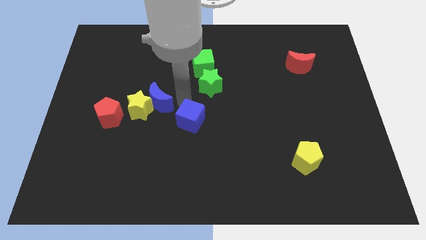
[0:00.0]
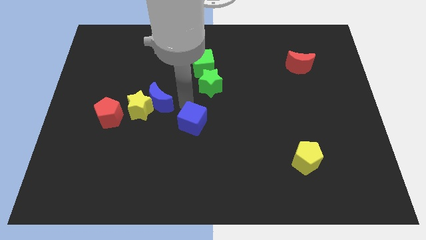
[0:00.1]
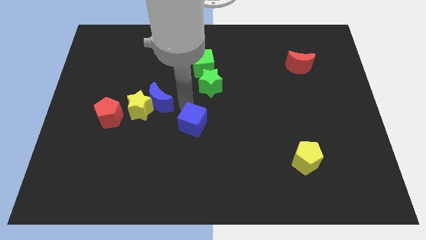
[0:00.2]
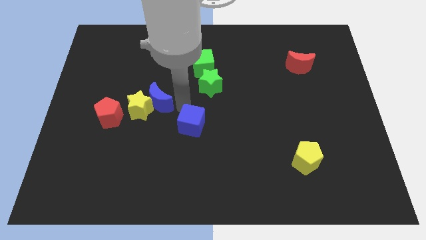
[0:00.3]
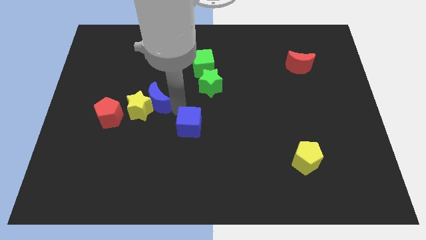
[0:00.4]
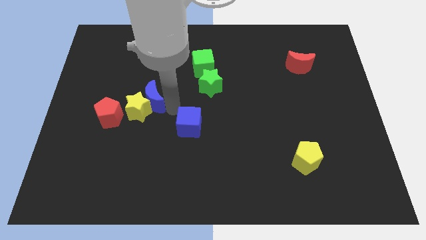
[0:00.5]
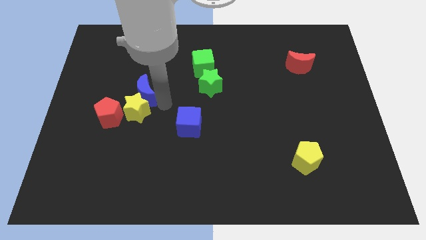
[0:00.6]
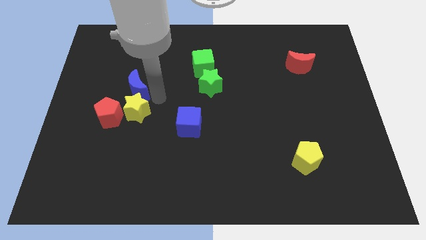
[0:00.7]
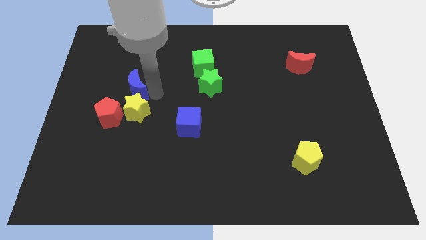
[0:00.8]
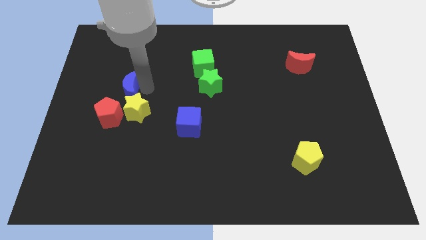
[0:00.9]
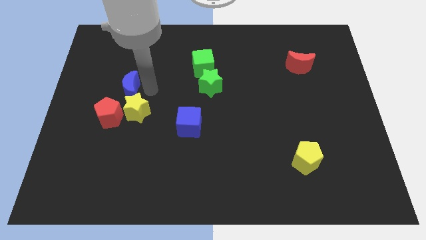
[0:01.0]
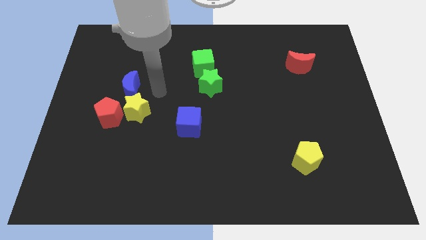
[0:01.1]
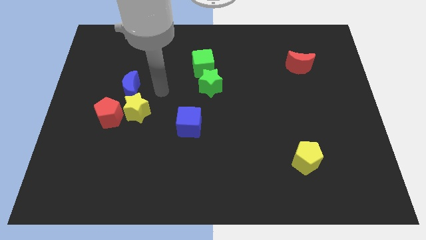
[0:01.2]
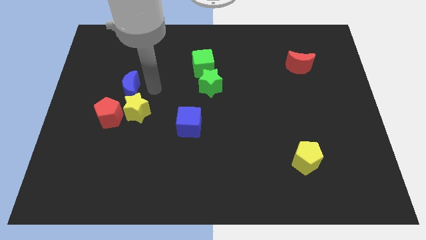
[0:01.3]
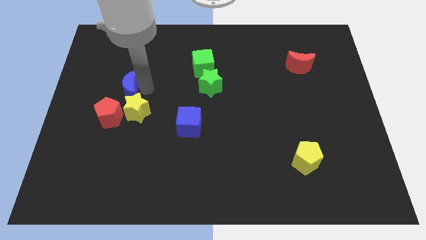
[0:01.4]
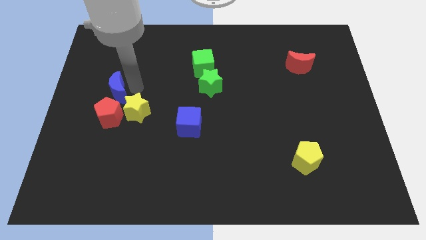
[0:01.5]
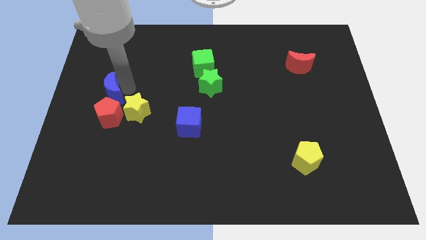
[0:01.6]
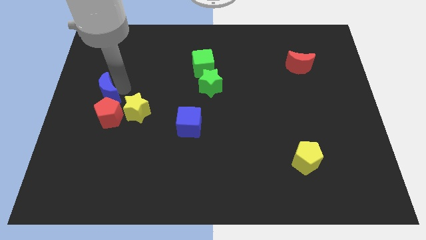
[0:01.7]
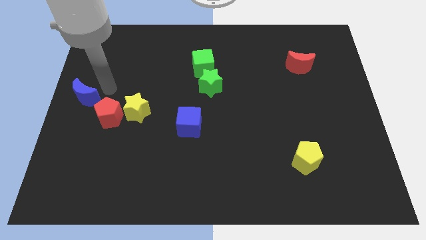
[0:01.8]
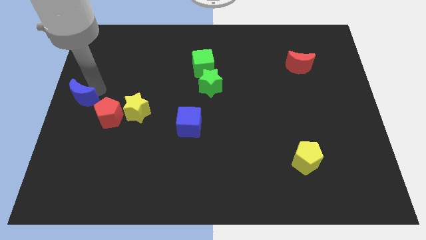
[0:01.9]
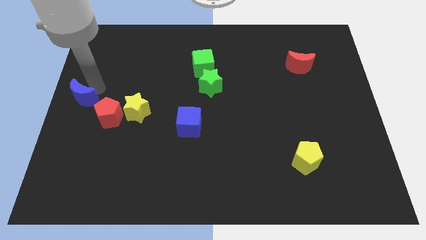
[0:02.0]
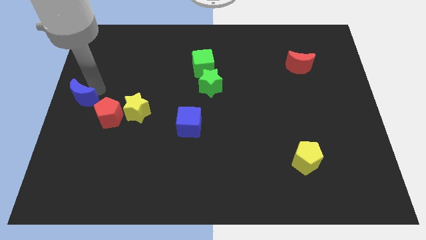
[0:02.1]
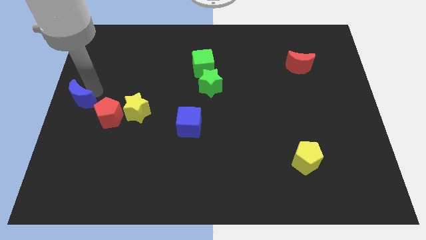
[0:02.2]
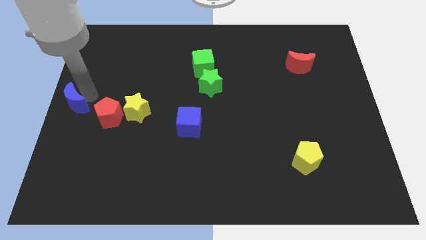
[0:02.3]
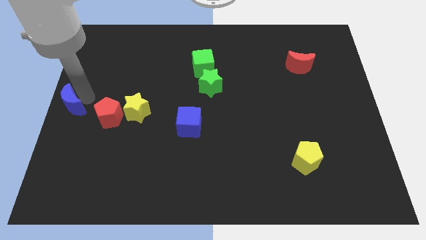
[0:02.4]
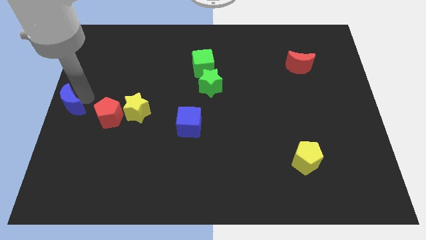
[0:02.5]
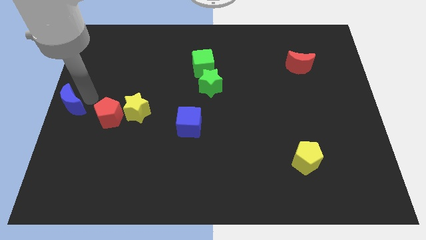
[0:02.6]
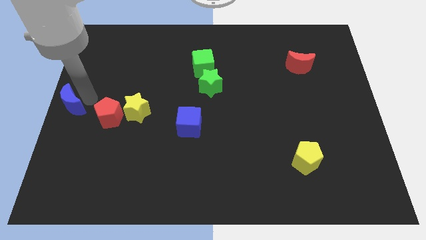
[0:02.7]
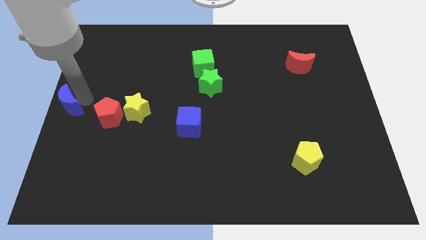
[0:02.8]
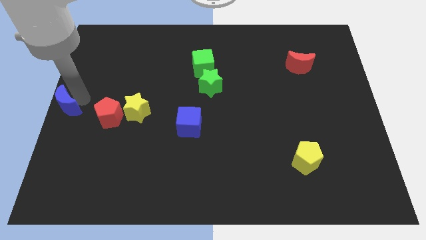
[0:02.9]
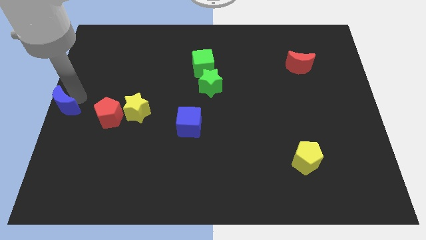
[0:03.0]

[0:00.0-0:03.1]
place the blue moon to the top left of the red pentagon

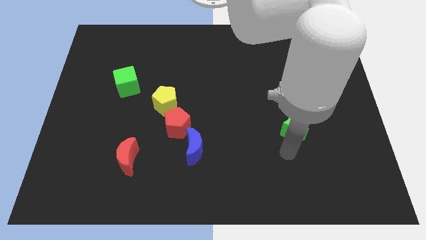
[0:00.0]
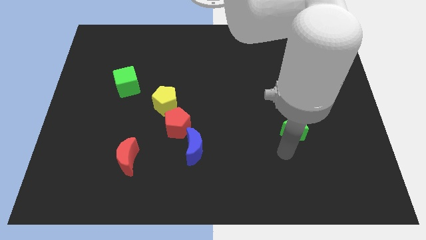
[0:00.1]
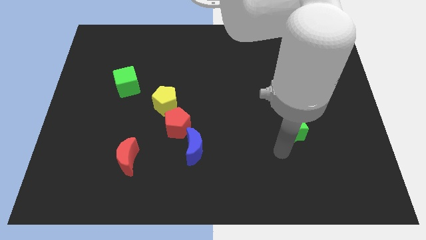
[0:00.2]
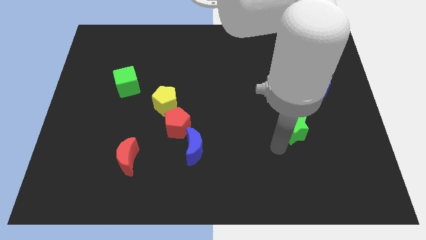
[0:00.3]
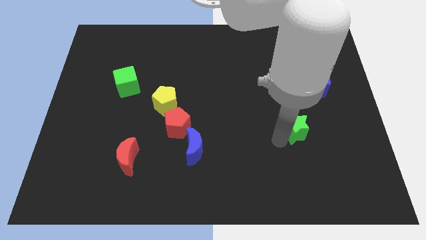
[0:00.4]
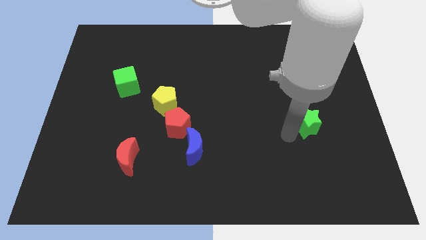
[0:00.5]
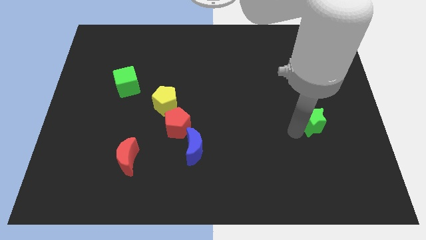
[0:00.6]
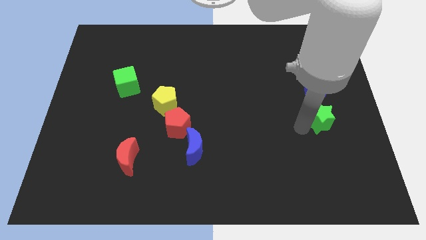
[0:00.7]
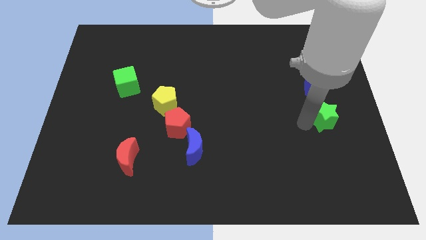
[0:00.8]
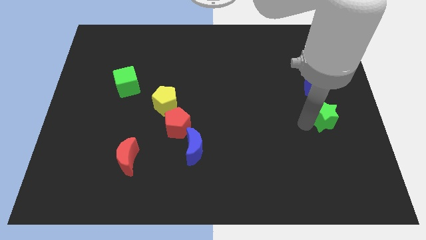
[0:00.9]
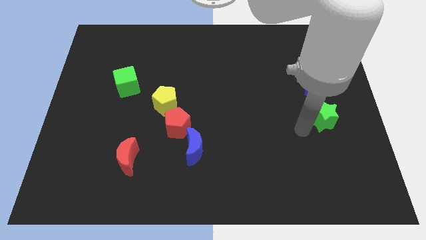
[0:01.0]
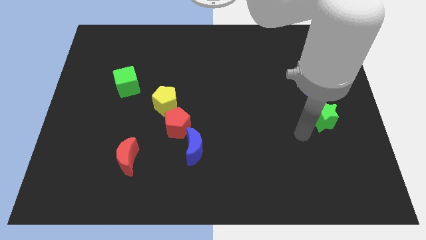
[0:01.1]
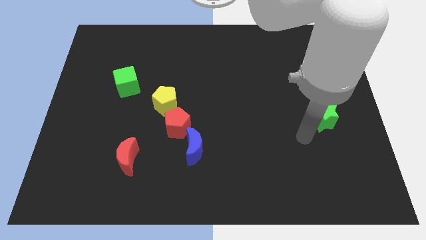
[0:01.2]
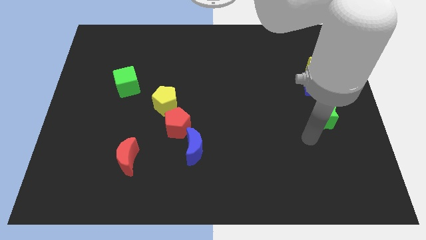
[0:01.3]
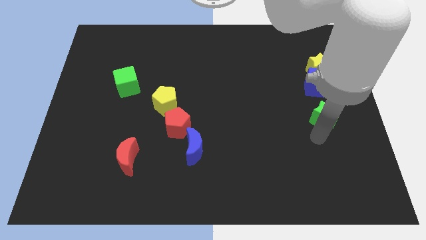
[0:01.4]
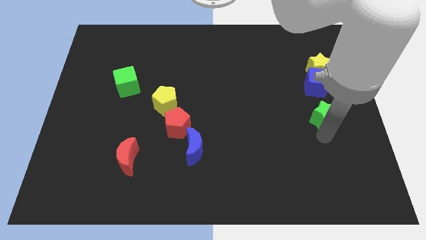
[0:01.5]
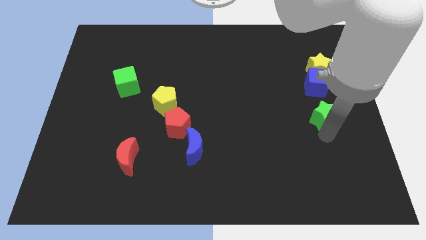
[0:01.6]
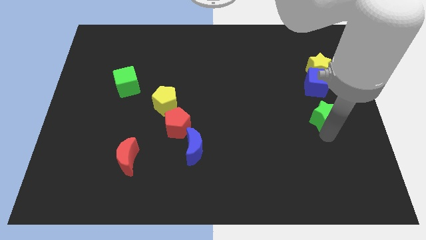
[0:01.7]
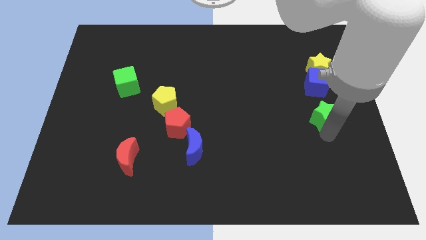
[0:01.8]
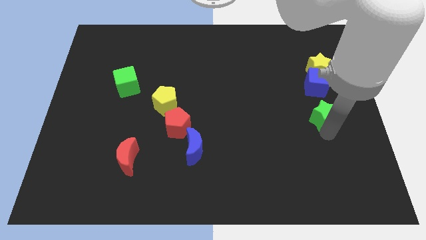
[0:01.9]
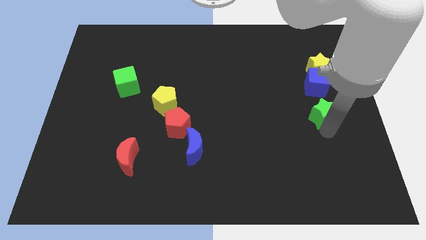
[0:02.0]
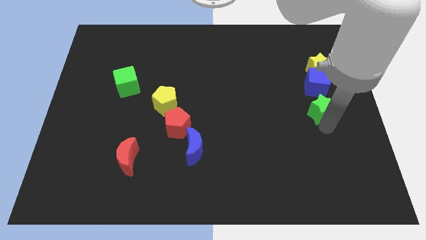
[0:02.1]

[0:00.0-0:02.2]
push the green star towards the bottom of the blue cube

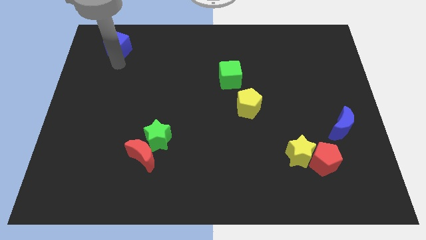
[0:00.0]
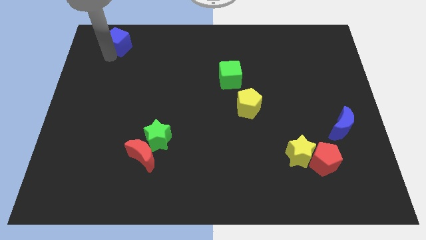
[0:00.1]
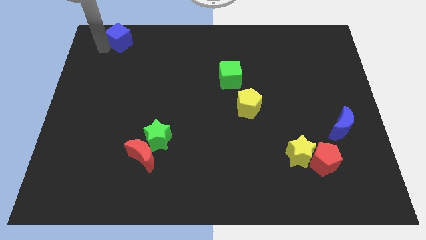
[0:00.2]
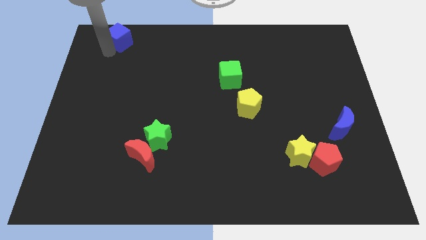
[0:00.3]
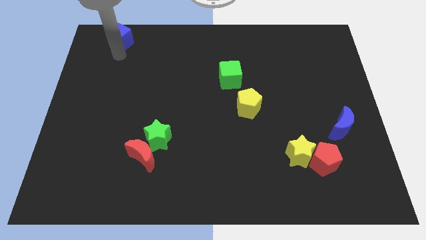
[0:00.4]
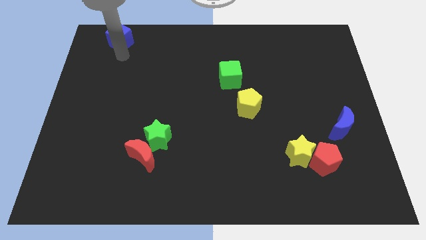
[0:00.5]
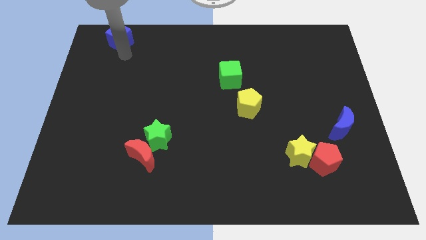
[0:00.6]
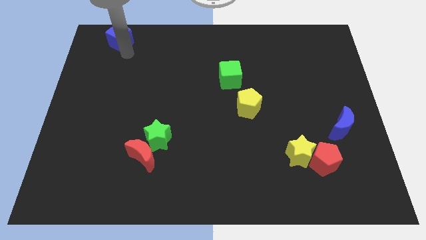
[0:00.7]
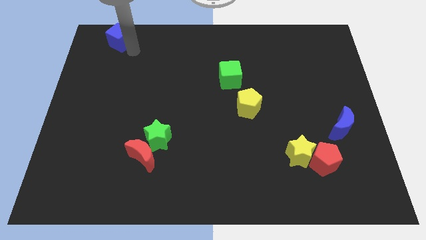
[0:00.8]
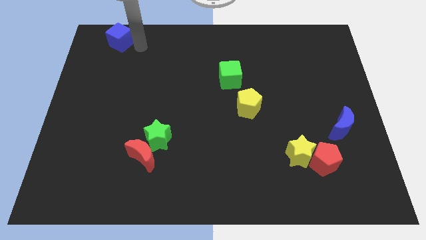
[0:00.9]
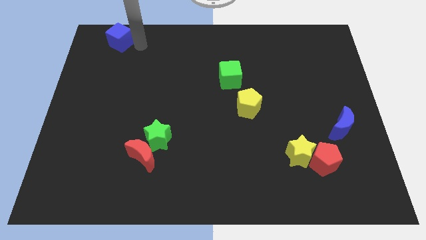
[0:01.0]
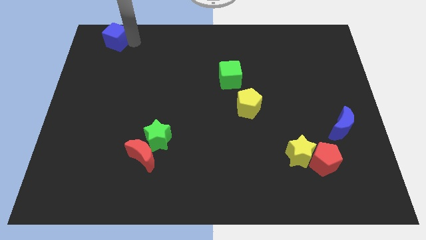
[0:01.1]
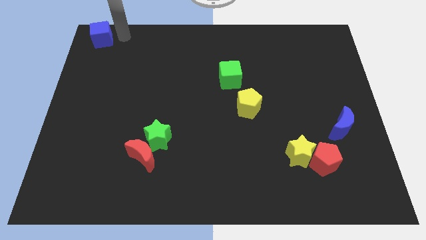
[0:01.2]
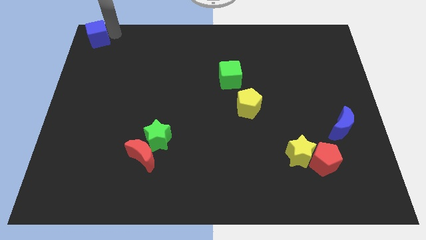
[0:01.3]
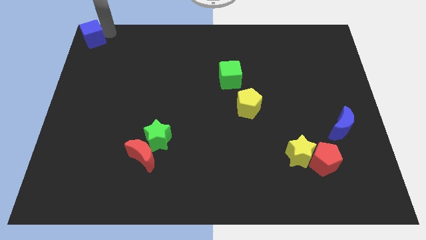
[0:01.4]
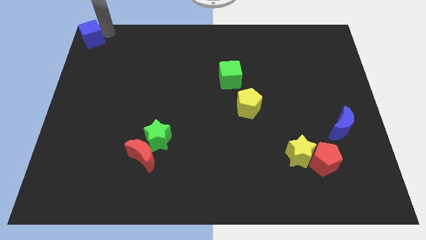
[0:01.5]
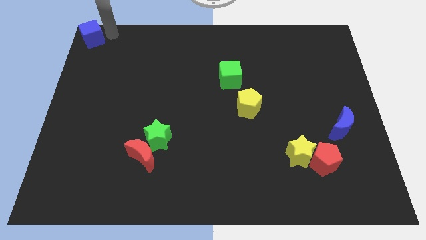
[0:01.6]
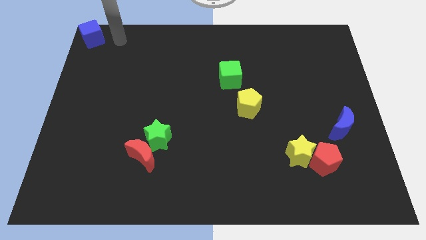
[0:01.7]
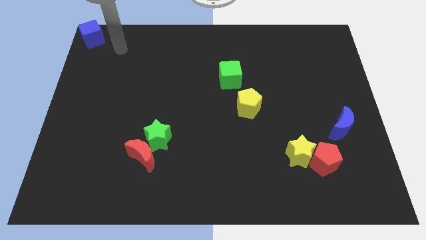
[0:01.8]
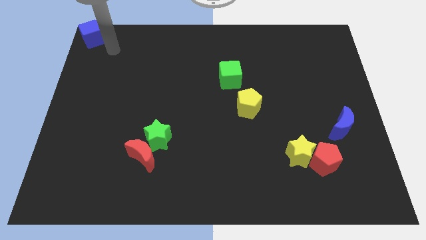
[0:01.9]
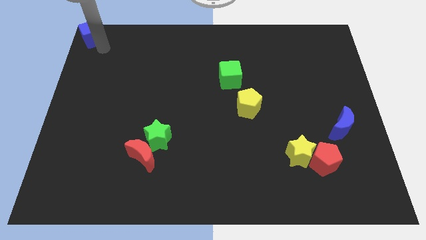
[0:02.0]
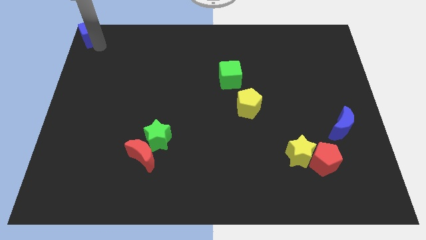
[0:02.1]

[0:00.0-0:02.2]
place the blue cube at the top left corner of the board

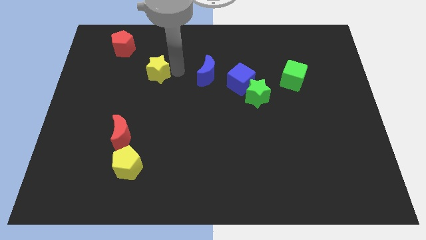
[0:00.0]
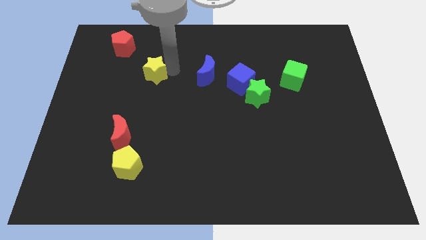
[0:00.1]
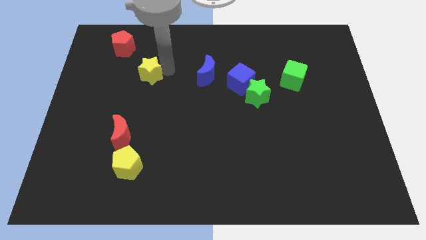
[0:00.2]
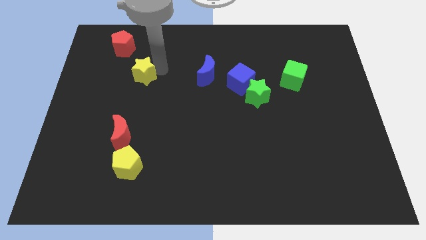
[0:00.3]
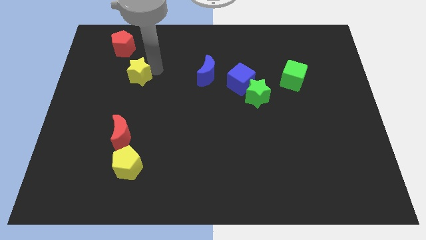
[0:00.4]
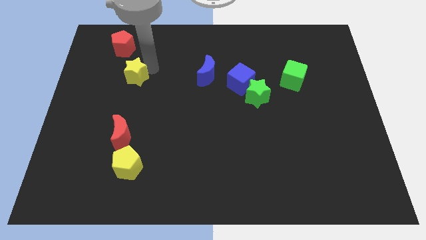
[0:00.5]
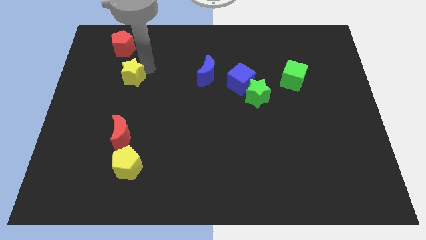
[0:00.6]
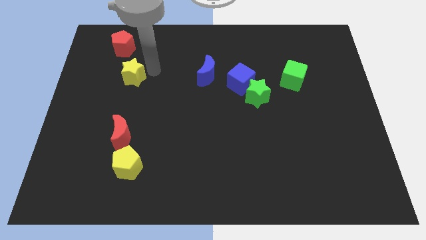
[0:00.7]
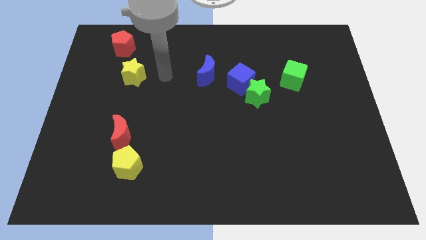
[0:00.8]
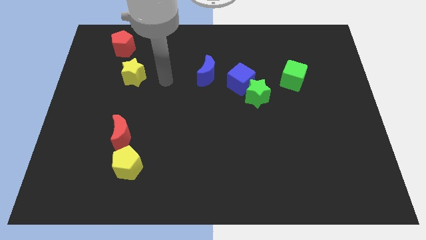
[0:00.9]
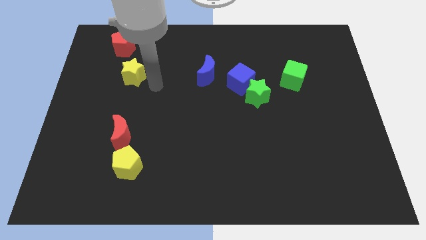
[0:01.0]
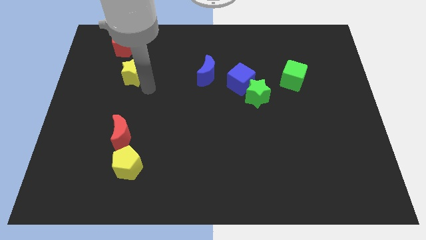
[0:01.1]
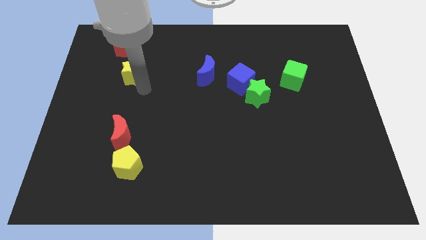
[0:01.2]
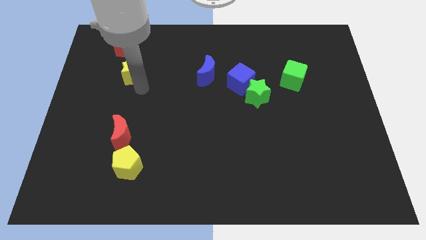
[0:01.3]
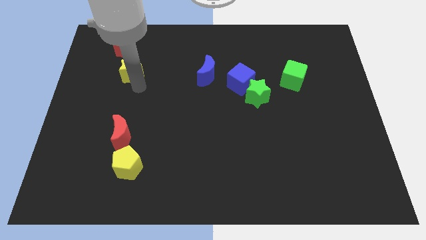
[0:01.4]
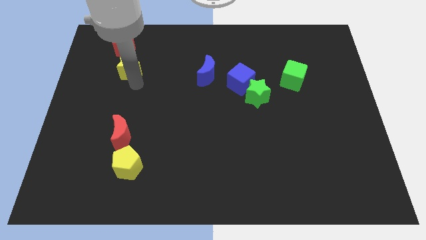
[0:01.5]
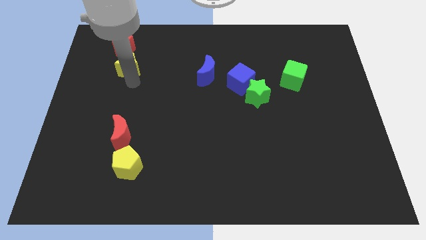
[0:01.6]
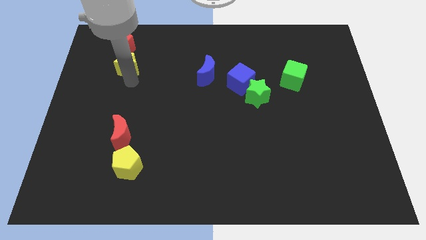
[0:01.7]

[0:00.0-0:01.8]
place the yellow star below the red pentagon
